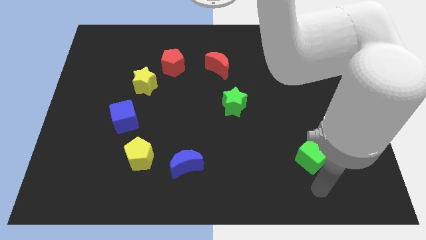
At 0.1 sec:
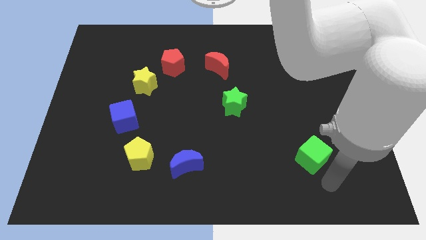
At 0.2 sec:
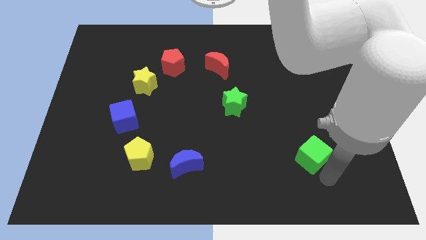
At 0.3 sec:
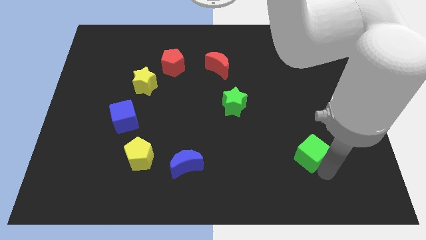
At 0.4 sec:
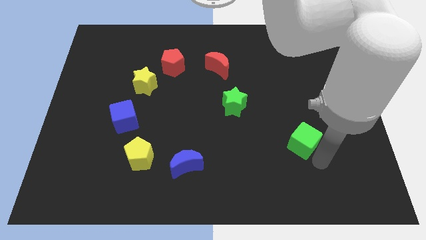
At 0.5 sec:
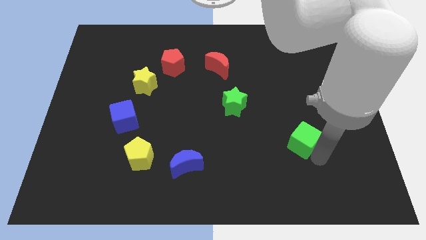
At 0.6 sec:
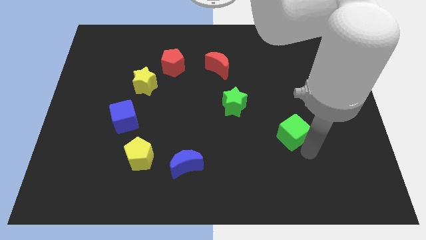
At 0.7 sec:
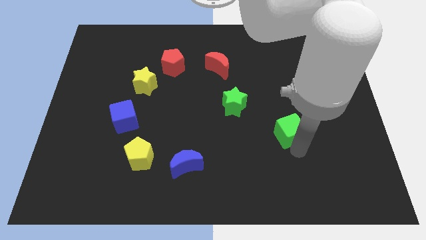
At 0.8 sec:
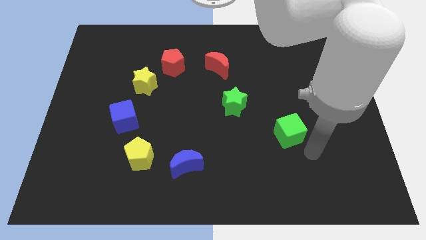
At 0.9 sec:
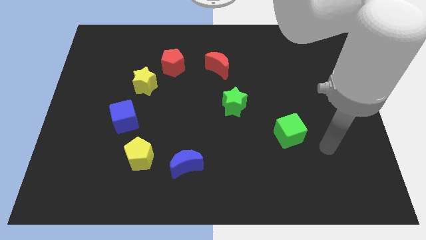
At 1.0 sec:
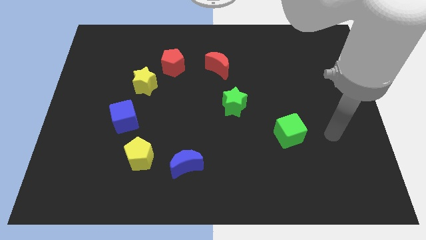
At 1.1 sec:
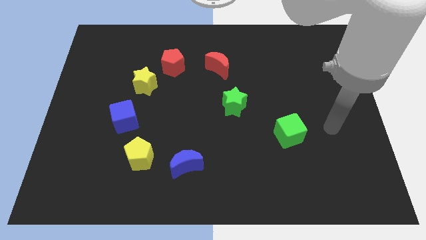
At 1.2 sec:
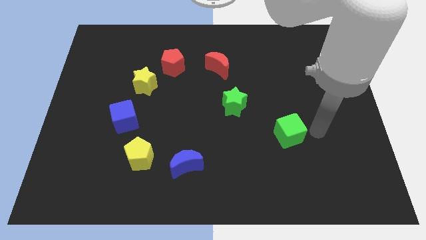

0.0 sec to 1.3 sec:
drag green cube diagonally top right to the blue moon

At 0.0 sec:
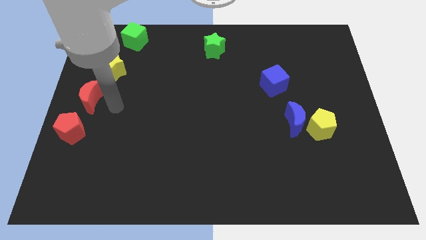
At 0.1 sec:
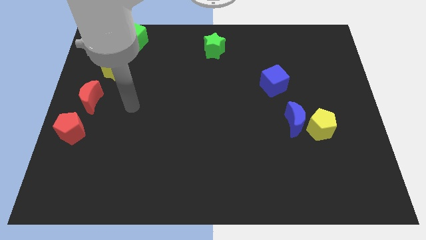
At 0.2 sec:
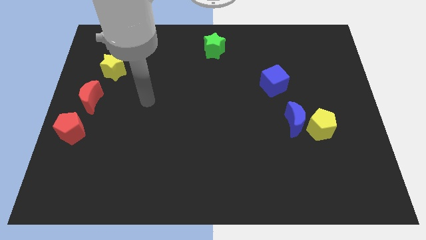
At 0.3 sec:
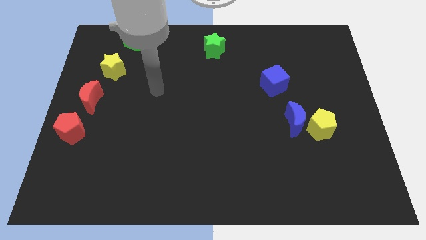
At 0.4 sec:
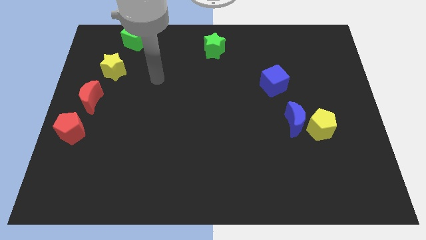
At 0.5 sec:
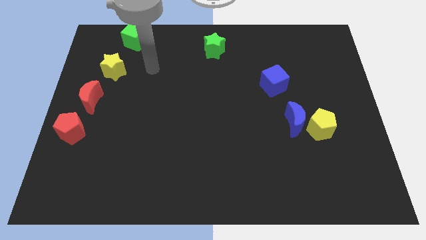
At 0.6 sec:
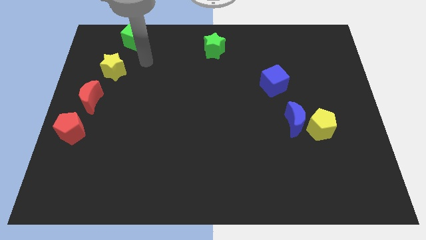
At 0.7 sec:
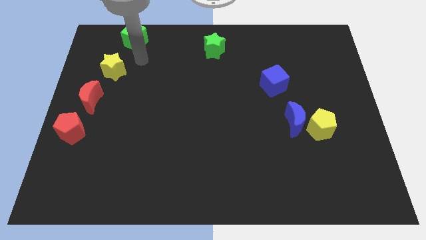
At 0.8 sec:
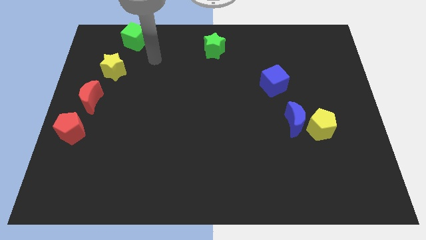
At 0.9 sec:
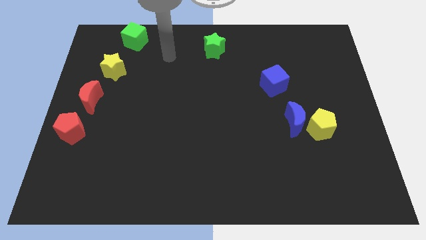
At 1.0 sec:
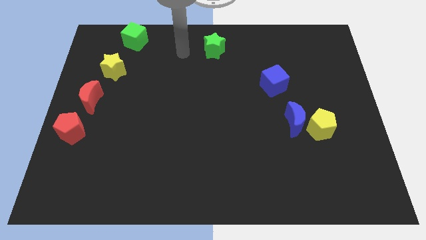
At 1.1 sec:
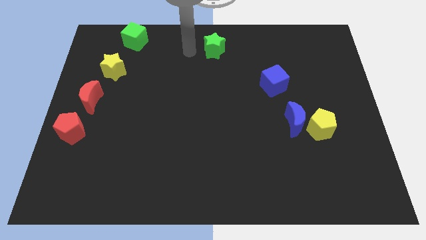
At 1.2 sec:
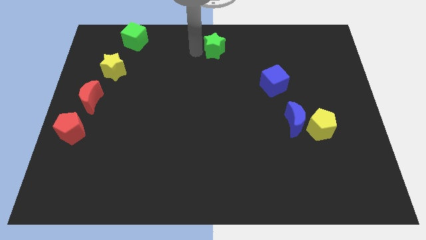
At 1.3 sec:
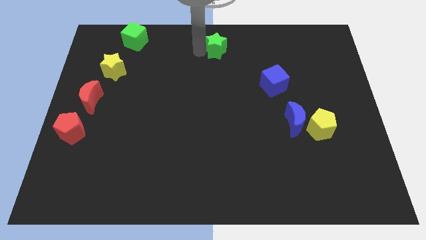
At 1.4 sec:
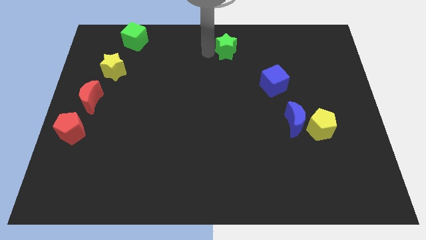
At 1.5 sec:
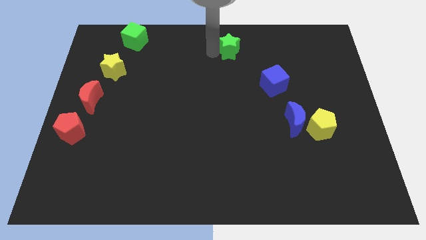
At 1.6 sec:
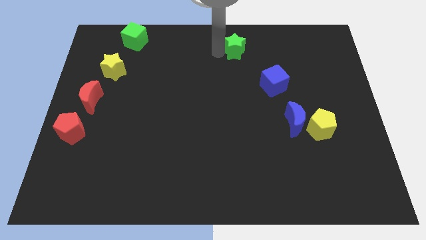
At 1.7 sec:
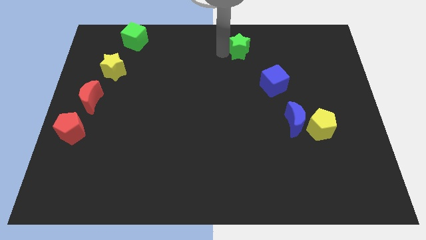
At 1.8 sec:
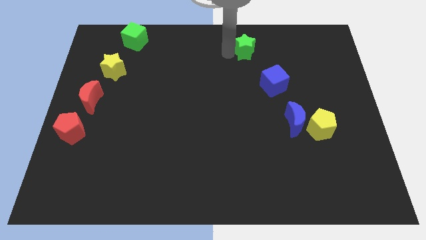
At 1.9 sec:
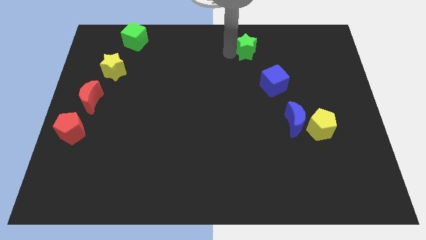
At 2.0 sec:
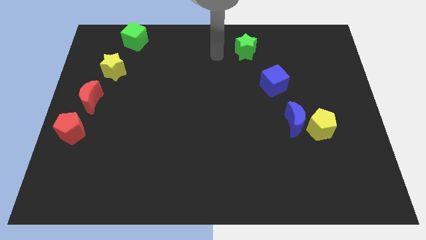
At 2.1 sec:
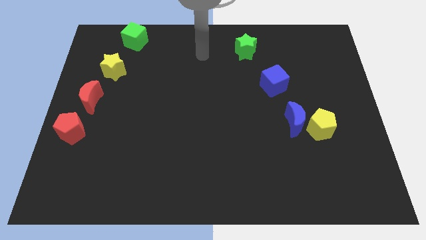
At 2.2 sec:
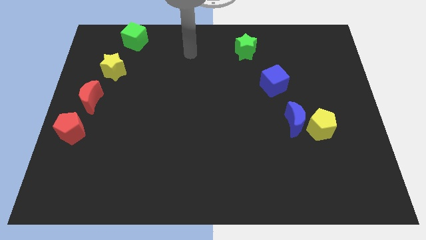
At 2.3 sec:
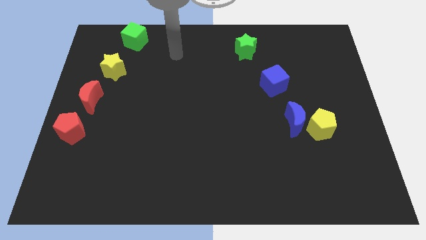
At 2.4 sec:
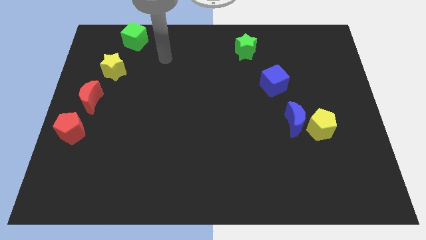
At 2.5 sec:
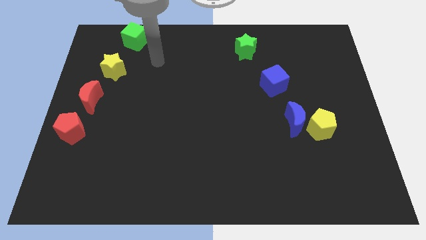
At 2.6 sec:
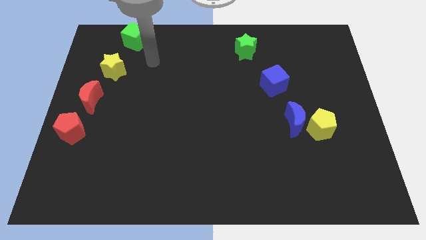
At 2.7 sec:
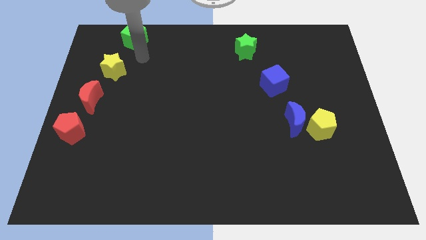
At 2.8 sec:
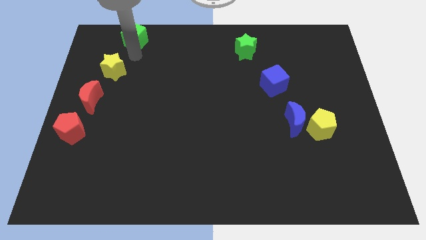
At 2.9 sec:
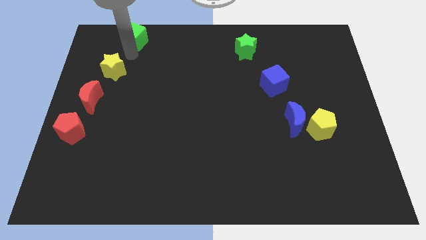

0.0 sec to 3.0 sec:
move the green star to the right of the board

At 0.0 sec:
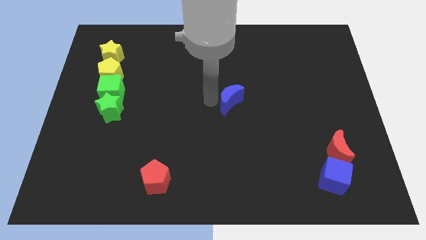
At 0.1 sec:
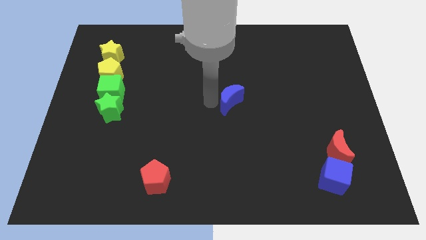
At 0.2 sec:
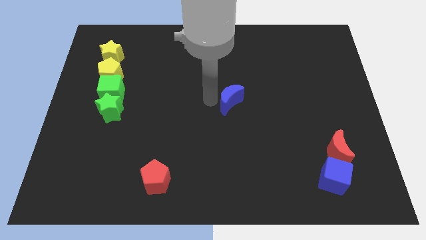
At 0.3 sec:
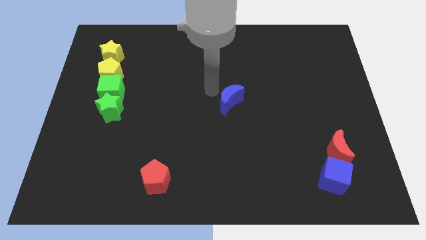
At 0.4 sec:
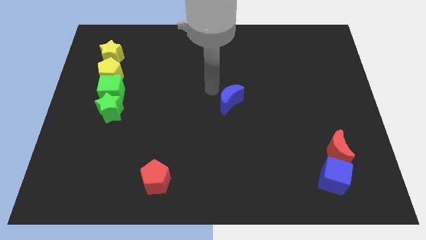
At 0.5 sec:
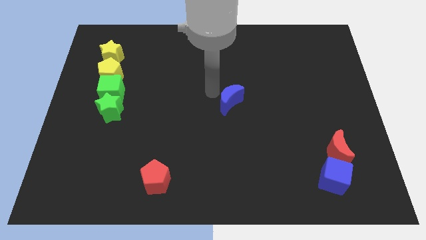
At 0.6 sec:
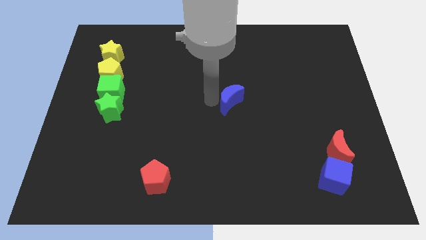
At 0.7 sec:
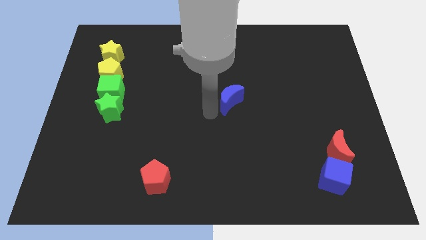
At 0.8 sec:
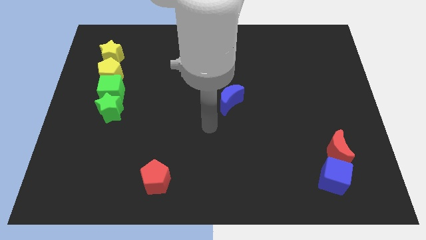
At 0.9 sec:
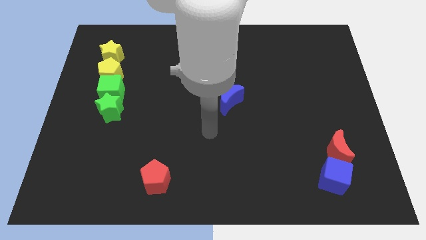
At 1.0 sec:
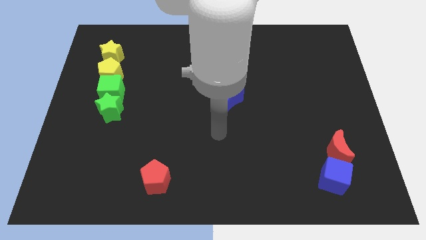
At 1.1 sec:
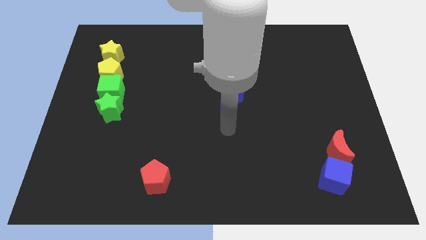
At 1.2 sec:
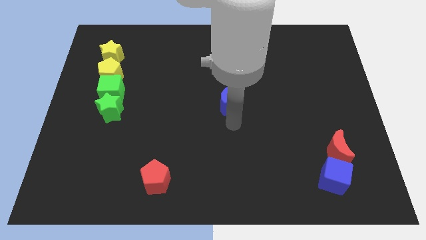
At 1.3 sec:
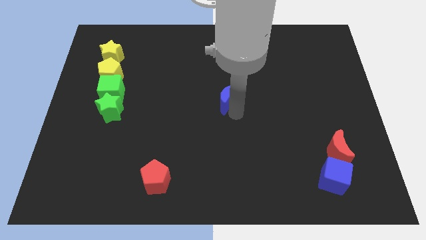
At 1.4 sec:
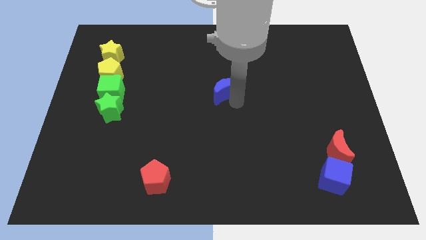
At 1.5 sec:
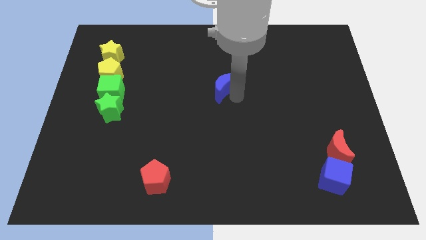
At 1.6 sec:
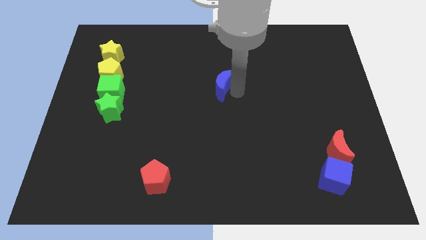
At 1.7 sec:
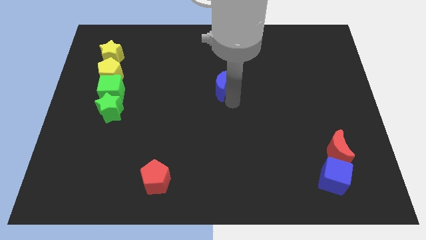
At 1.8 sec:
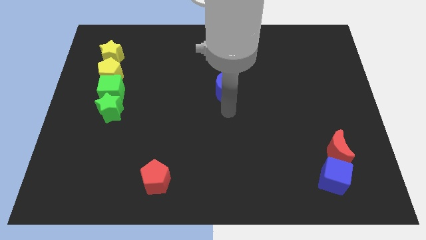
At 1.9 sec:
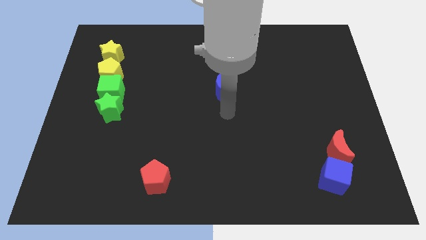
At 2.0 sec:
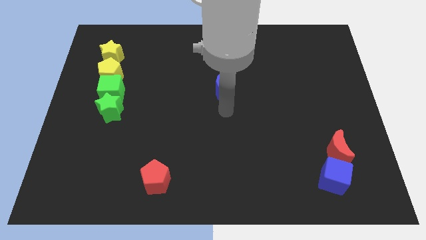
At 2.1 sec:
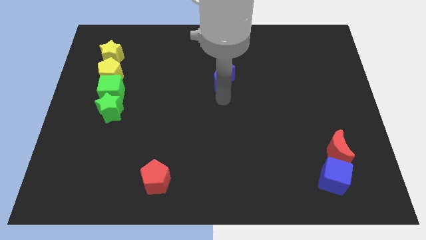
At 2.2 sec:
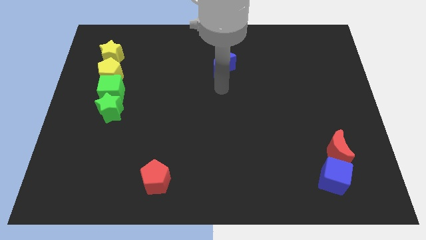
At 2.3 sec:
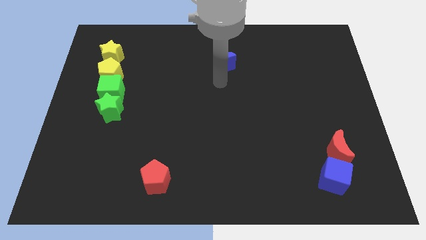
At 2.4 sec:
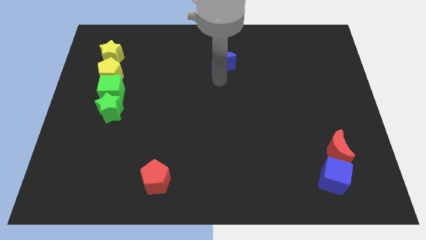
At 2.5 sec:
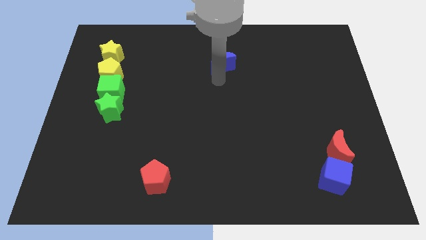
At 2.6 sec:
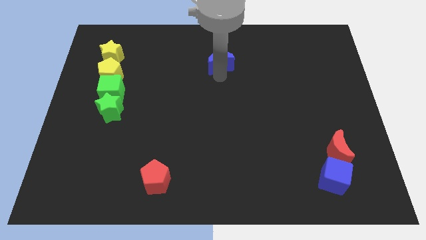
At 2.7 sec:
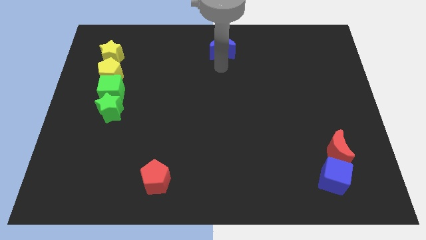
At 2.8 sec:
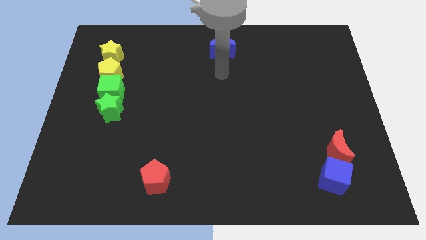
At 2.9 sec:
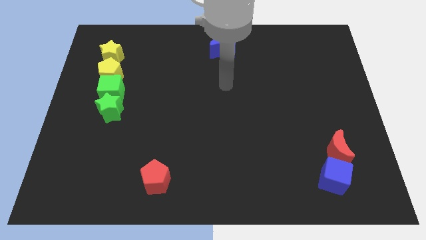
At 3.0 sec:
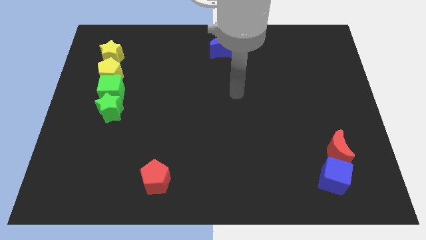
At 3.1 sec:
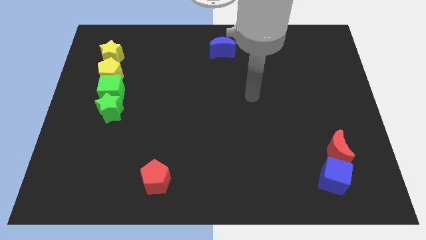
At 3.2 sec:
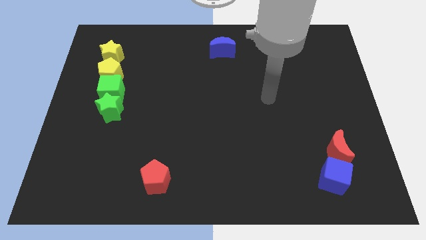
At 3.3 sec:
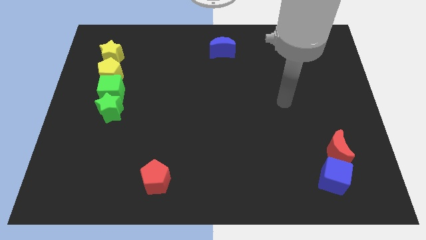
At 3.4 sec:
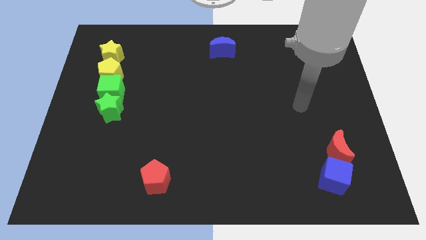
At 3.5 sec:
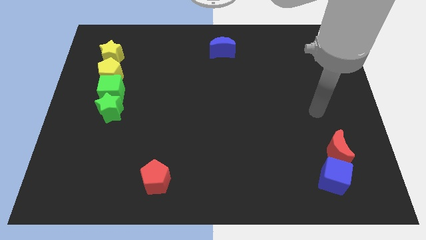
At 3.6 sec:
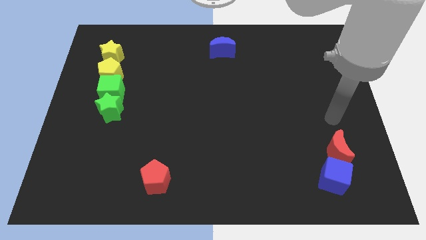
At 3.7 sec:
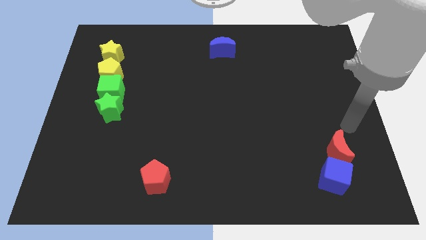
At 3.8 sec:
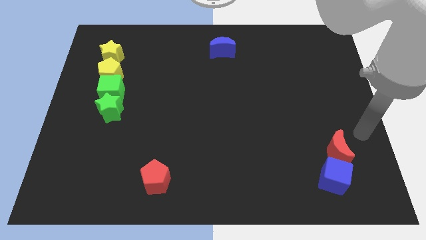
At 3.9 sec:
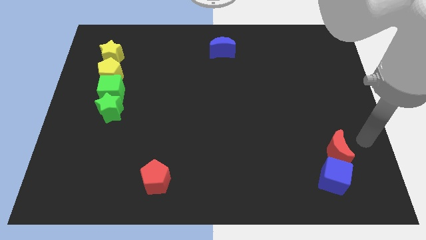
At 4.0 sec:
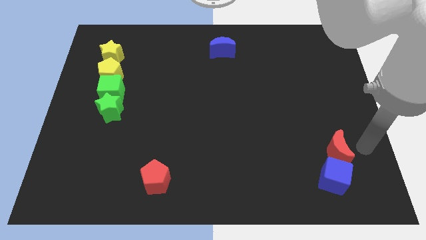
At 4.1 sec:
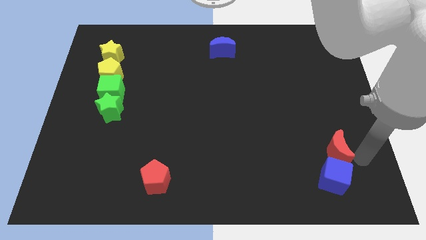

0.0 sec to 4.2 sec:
push the blue crescent to the top center of the board

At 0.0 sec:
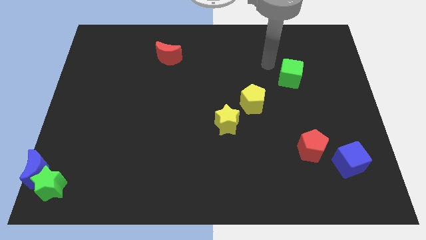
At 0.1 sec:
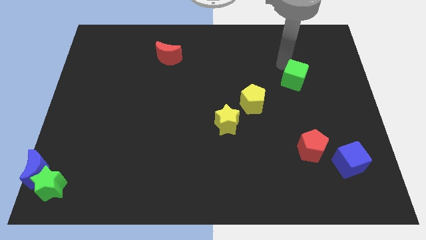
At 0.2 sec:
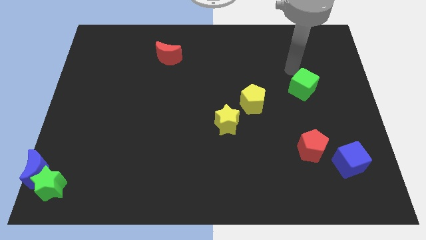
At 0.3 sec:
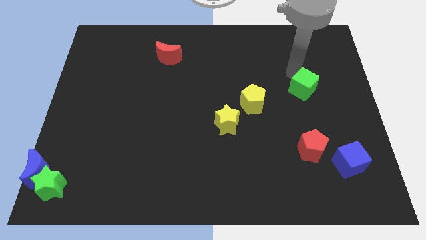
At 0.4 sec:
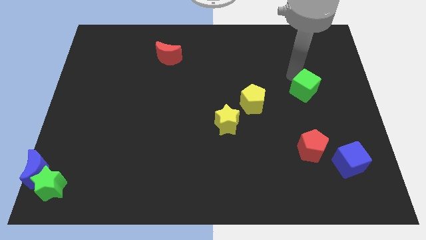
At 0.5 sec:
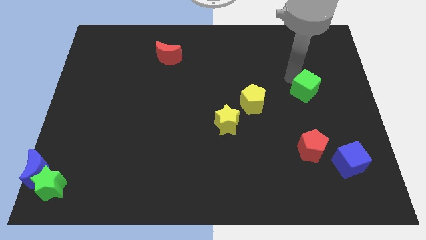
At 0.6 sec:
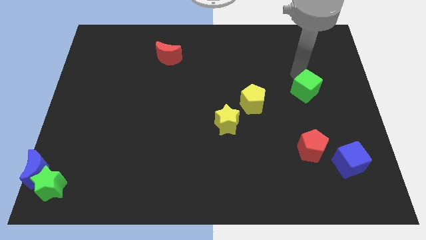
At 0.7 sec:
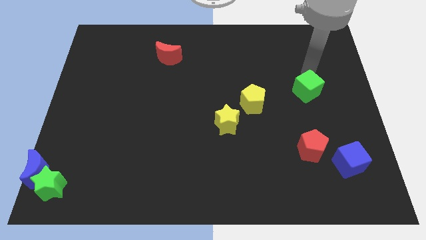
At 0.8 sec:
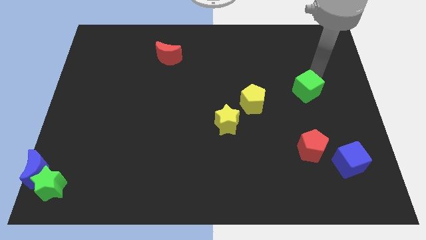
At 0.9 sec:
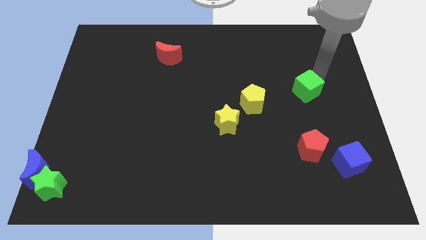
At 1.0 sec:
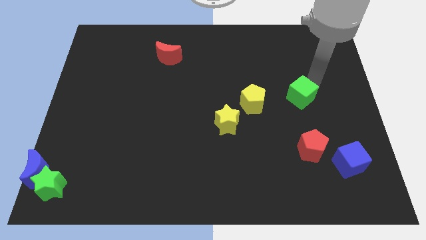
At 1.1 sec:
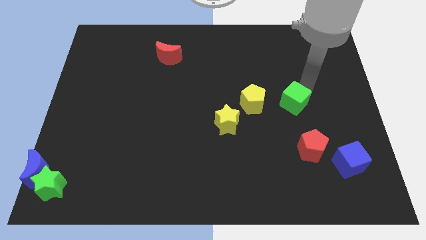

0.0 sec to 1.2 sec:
place the green cube right to the yellow pentagon
